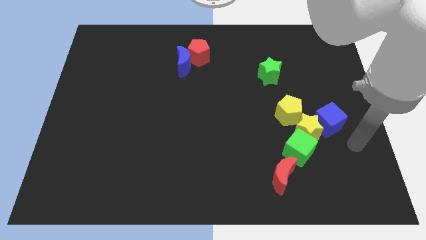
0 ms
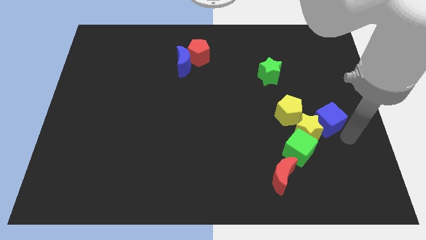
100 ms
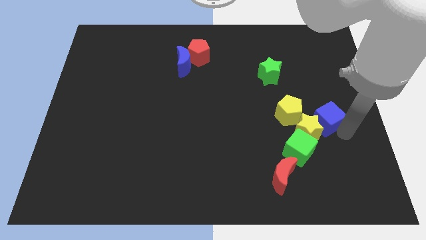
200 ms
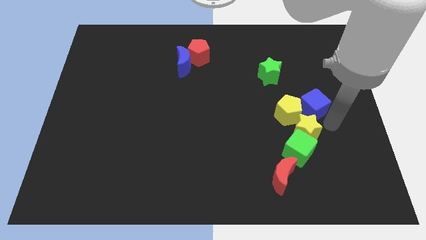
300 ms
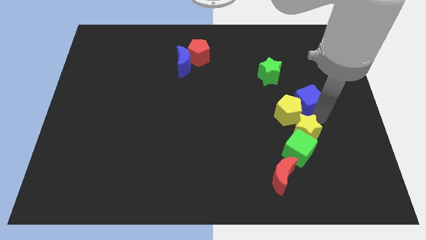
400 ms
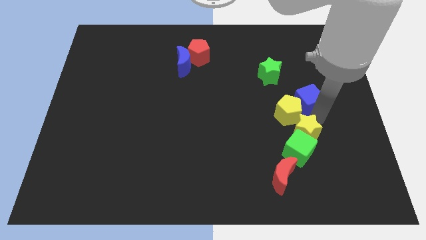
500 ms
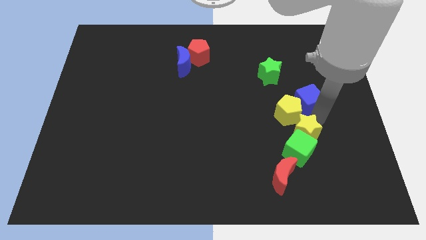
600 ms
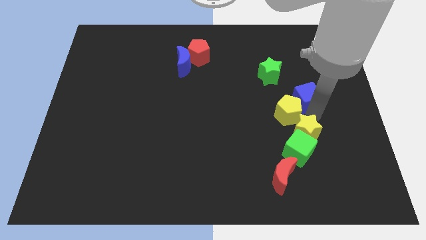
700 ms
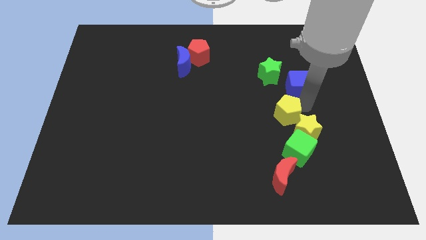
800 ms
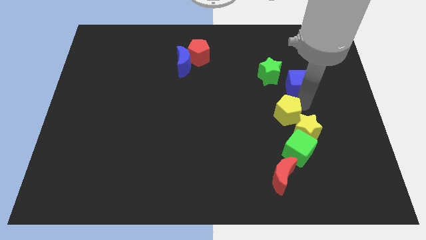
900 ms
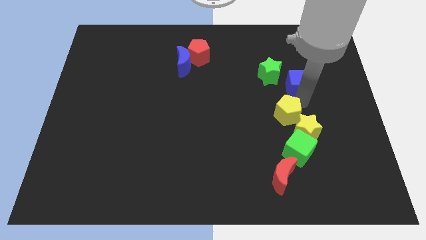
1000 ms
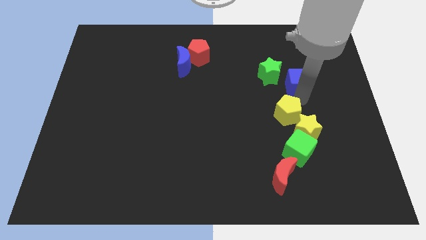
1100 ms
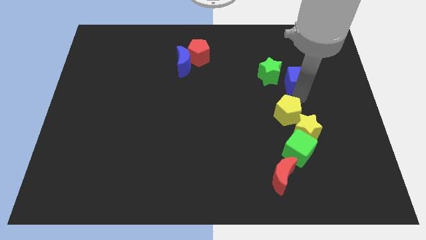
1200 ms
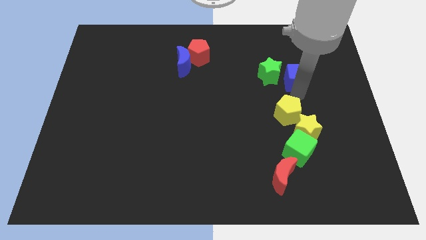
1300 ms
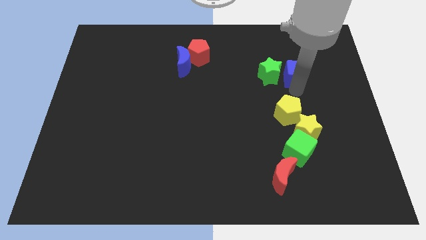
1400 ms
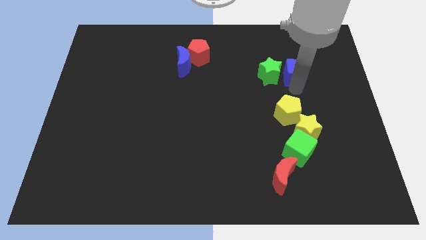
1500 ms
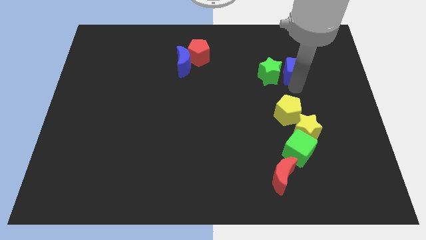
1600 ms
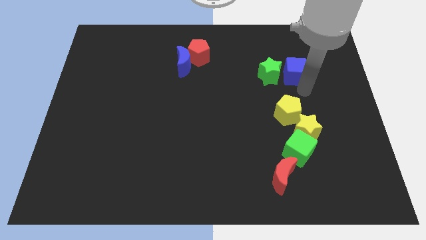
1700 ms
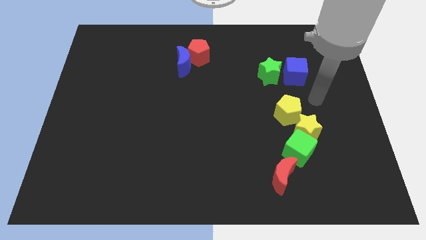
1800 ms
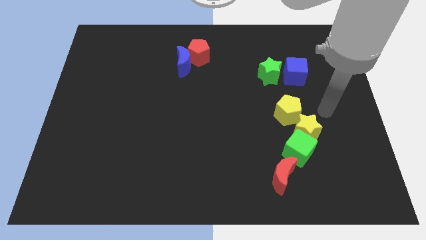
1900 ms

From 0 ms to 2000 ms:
move the blue cube to the right side of the green star

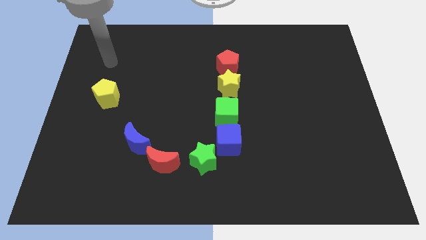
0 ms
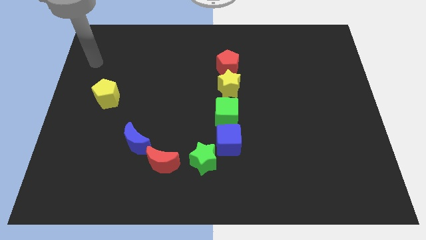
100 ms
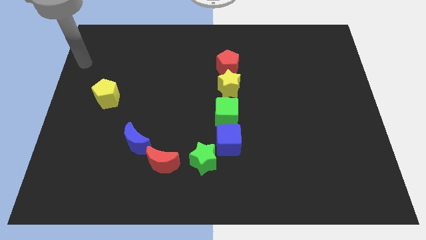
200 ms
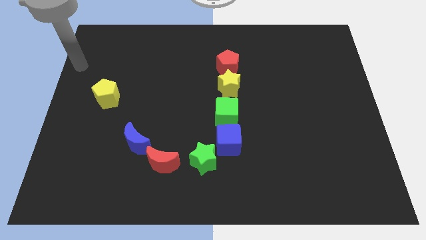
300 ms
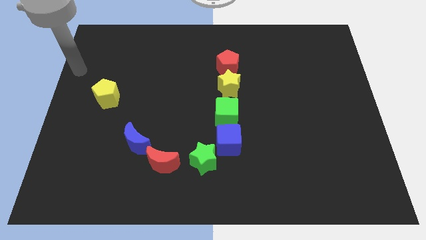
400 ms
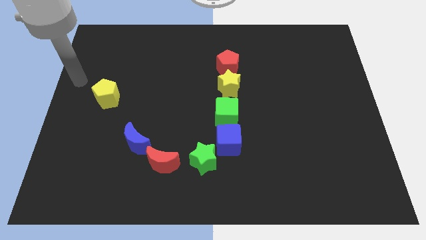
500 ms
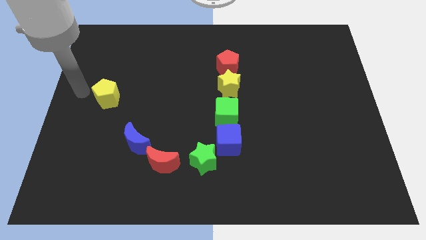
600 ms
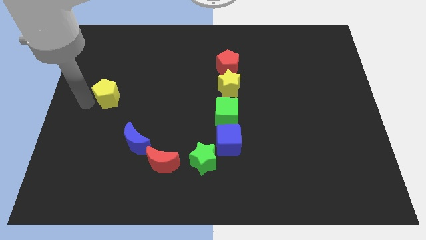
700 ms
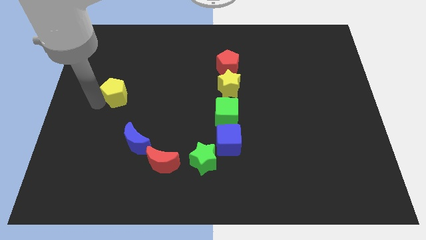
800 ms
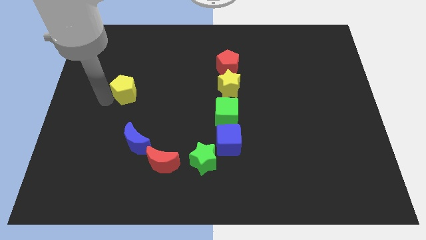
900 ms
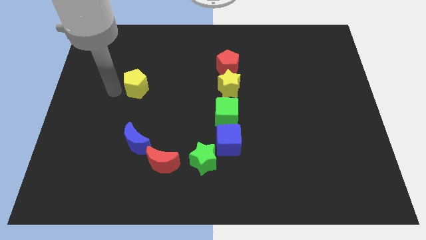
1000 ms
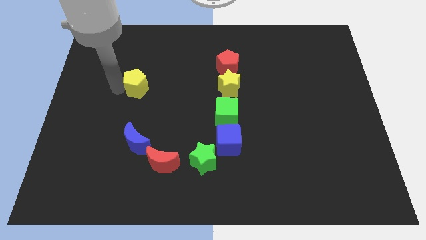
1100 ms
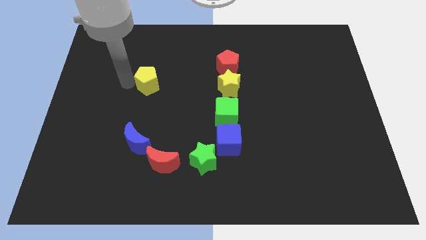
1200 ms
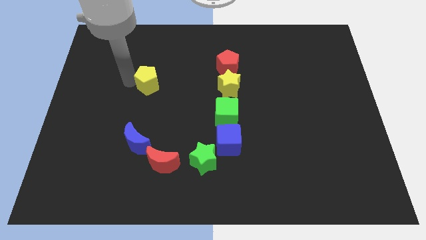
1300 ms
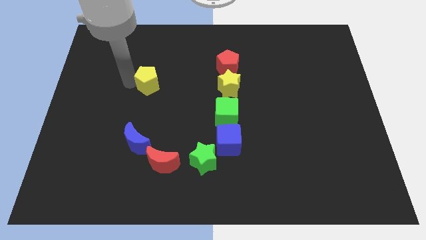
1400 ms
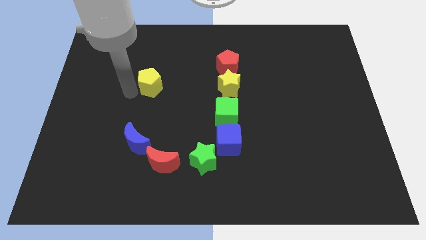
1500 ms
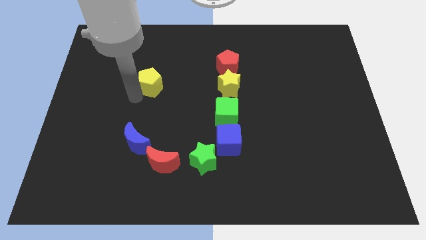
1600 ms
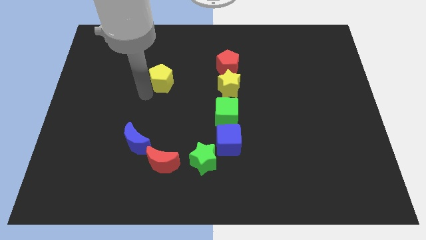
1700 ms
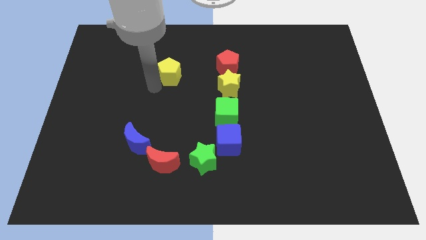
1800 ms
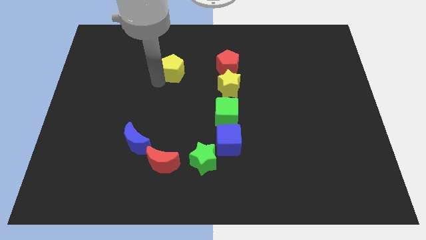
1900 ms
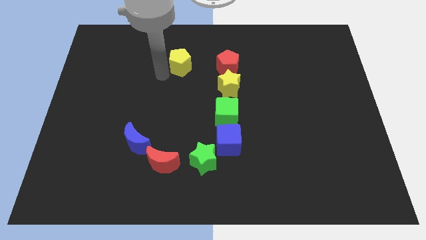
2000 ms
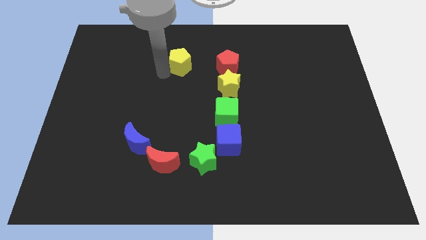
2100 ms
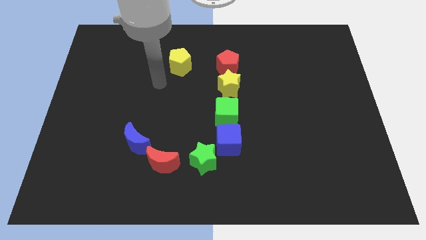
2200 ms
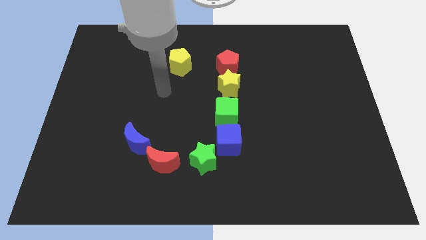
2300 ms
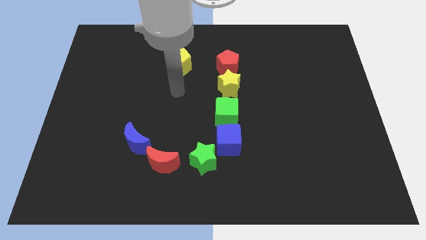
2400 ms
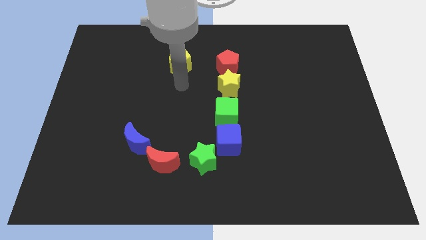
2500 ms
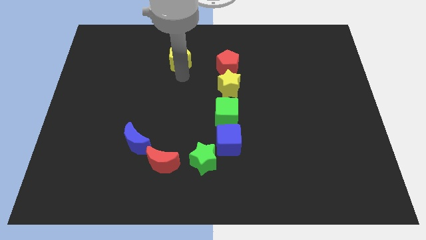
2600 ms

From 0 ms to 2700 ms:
place yellow pentagon beside red pentagon

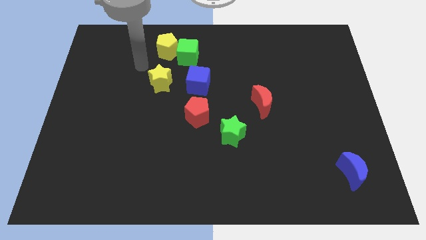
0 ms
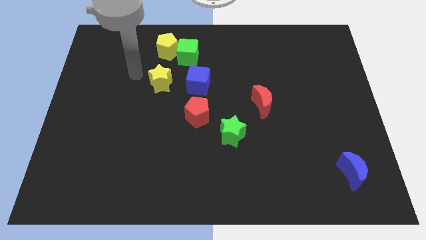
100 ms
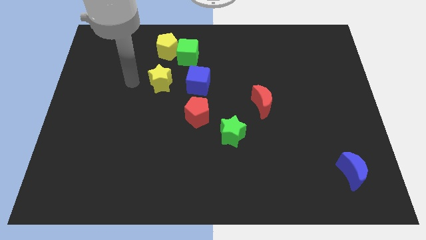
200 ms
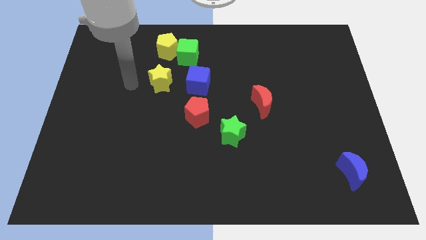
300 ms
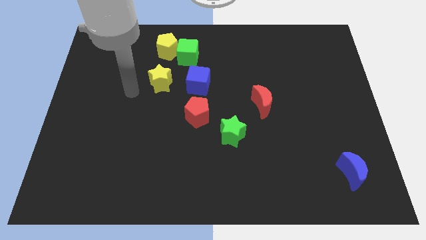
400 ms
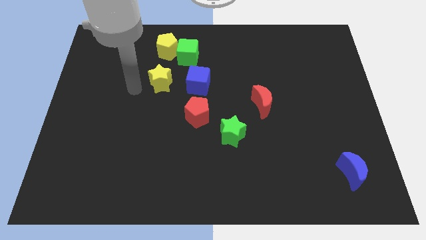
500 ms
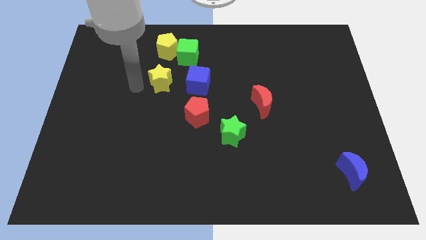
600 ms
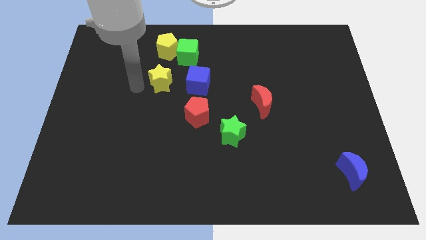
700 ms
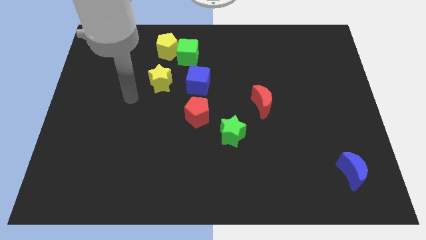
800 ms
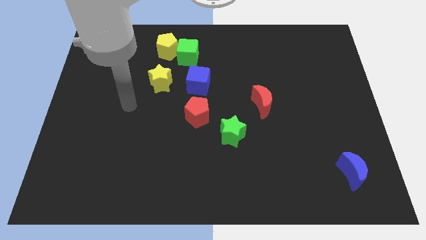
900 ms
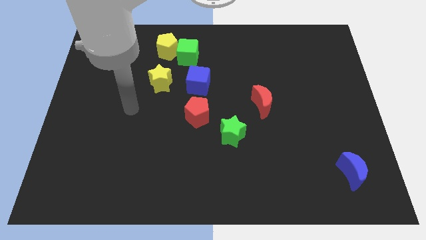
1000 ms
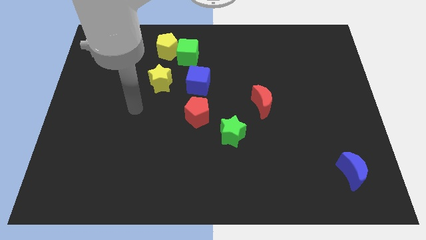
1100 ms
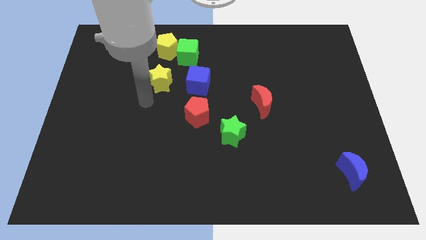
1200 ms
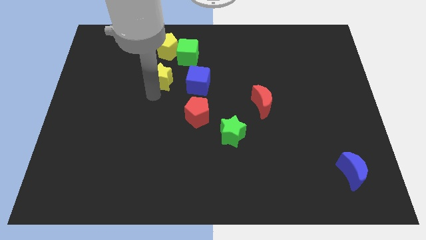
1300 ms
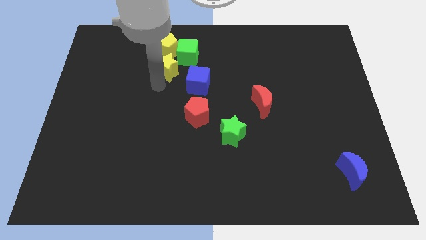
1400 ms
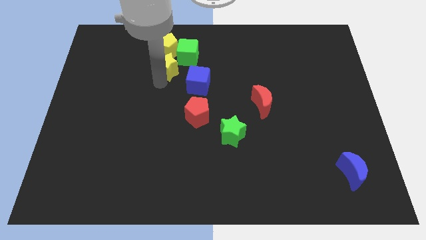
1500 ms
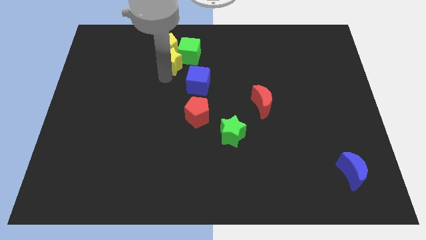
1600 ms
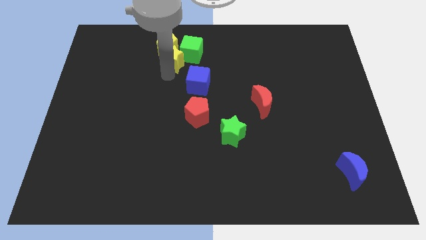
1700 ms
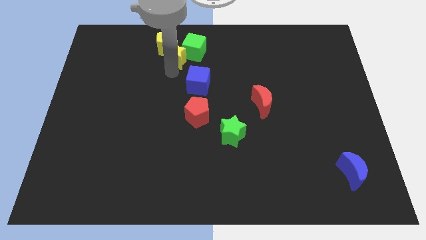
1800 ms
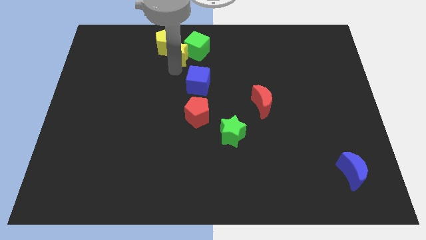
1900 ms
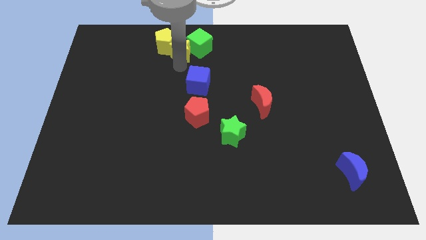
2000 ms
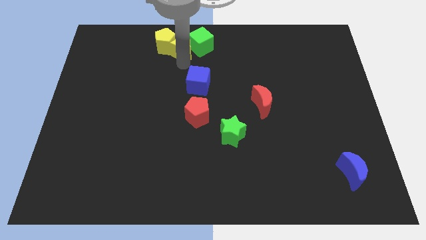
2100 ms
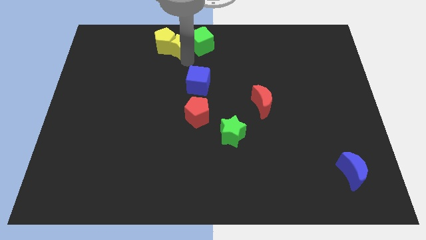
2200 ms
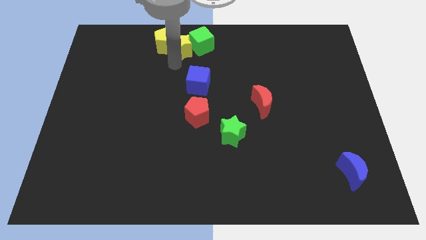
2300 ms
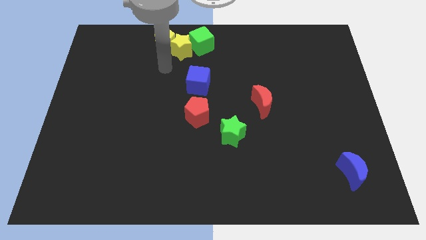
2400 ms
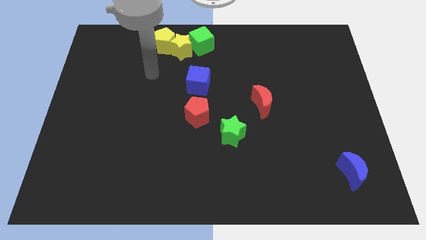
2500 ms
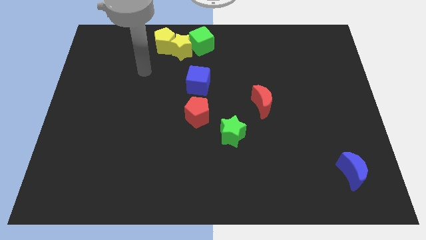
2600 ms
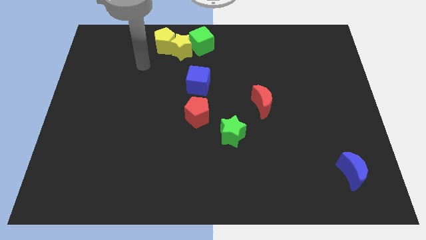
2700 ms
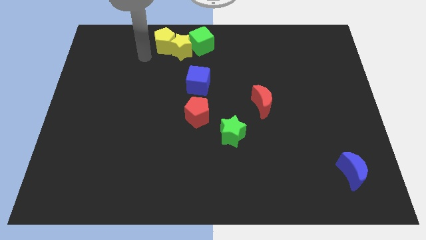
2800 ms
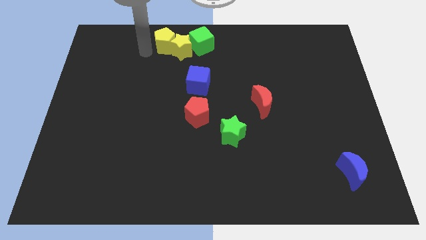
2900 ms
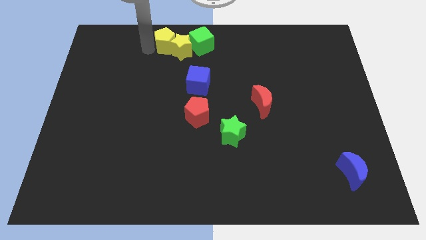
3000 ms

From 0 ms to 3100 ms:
push the yellow star close to the right of the yellow pentagon

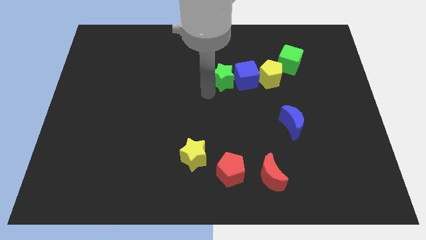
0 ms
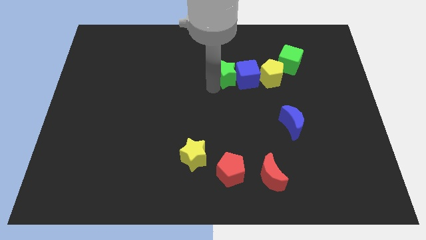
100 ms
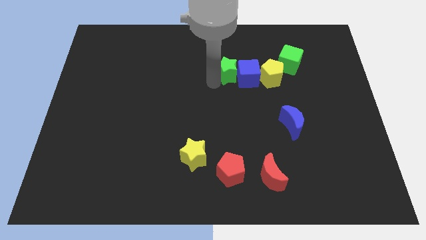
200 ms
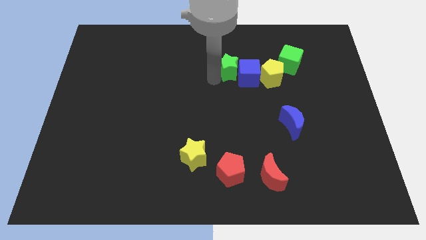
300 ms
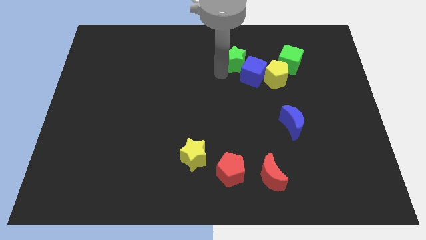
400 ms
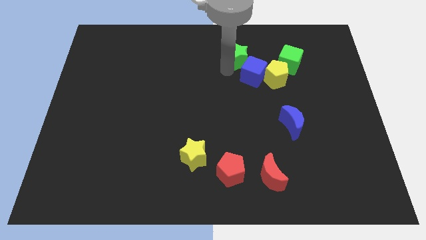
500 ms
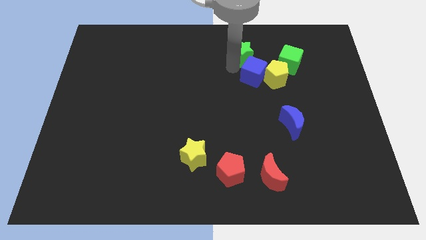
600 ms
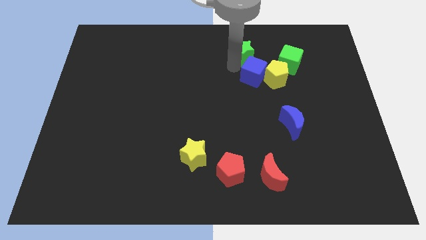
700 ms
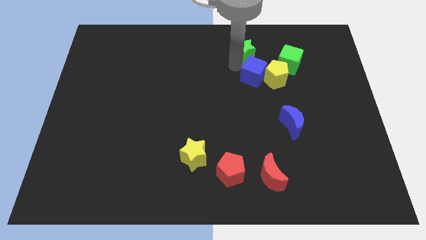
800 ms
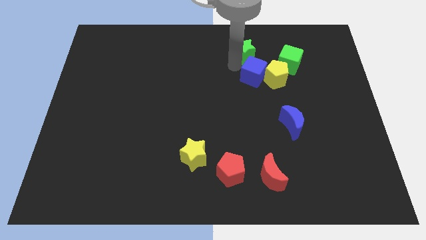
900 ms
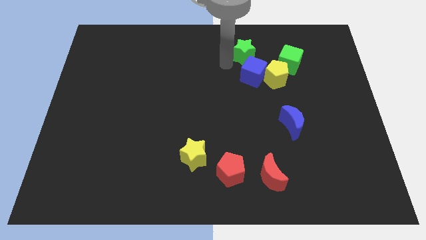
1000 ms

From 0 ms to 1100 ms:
move green star above blue cube

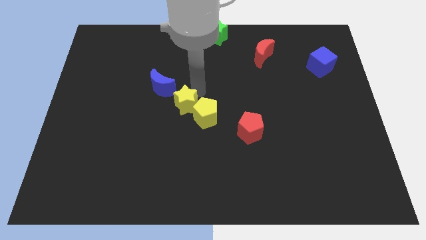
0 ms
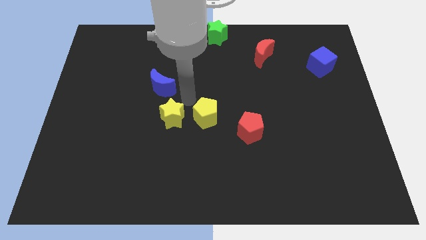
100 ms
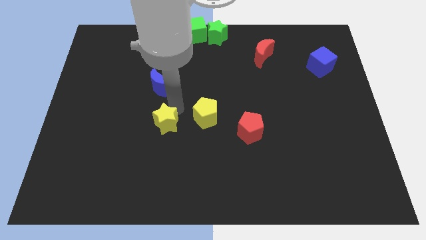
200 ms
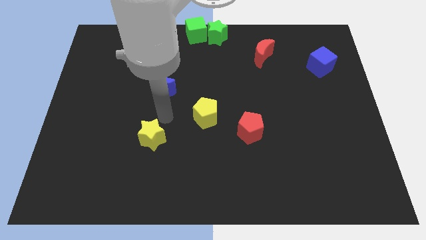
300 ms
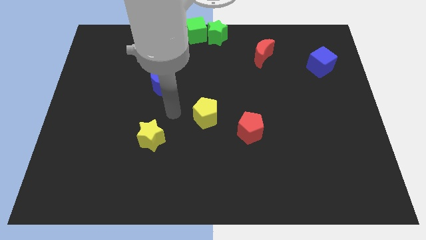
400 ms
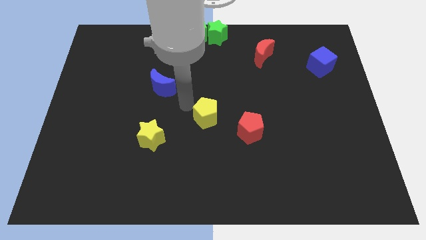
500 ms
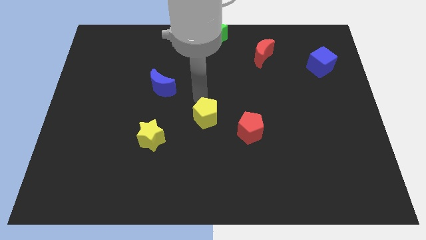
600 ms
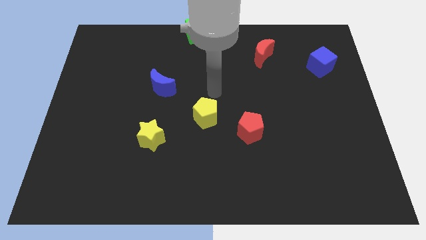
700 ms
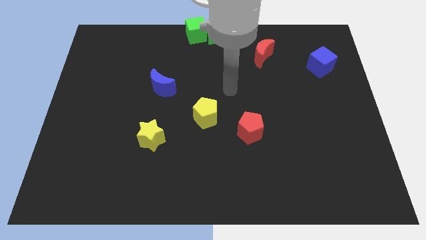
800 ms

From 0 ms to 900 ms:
move the yellow star towards bottom left of the board
